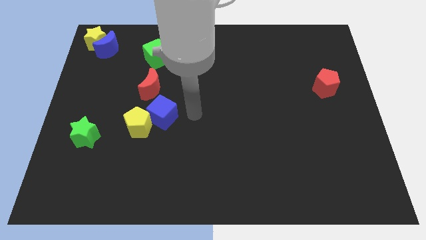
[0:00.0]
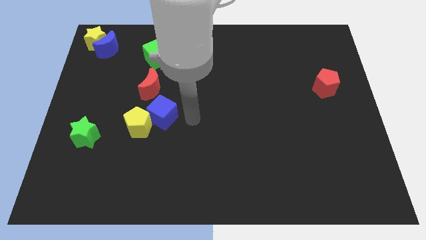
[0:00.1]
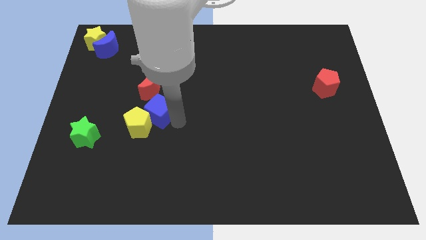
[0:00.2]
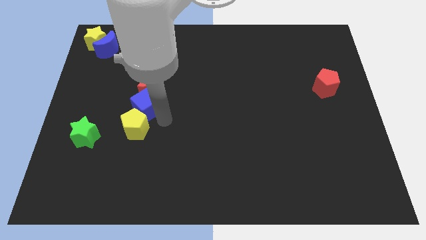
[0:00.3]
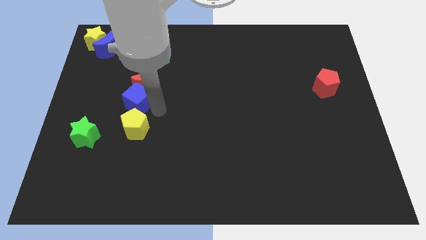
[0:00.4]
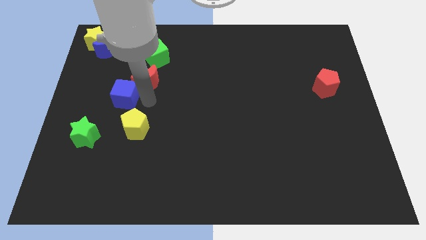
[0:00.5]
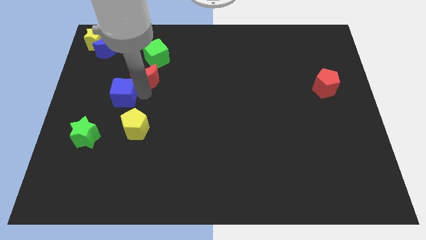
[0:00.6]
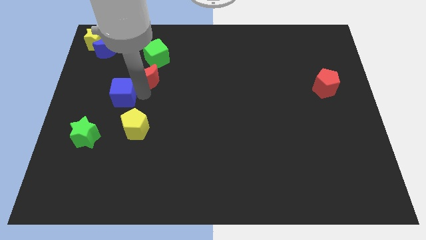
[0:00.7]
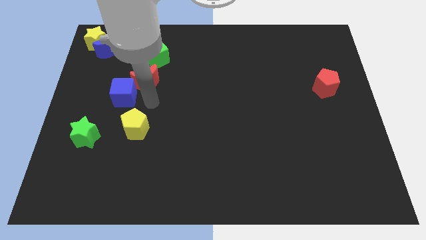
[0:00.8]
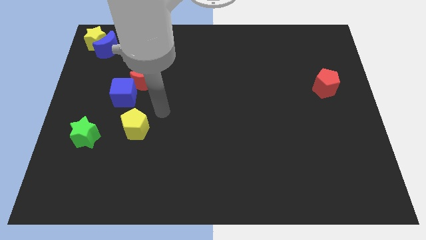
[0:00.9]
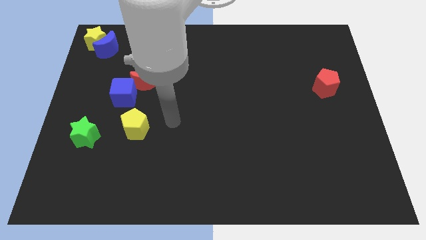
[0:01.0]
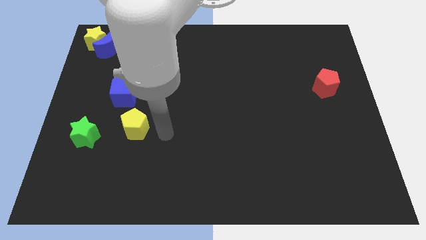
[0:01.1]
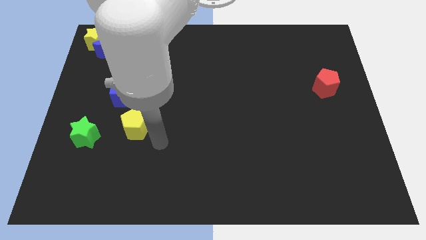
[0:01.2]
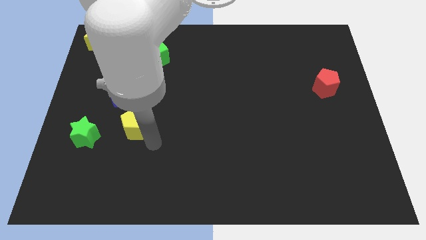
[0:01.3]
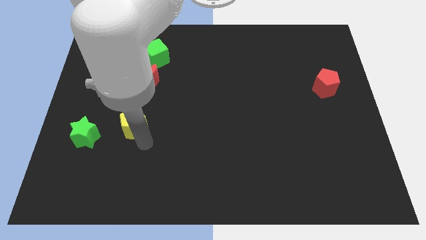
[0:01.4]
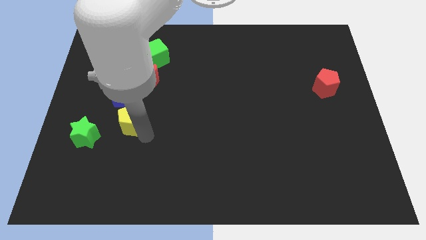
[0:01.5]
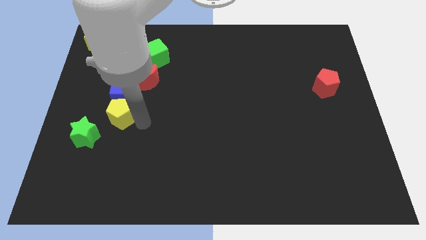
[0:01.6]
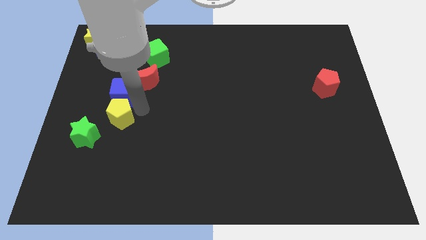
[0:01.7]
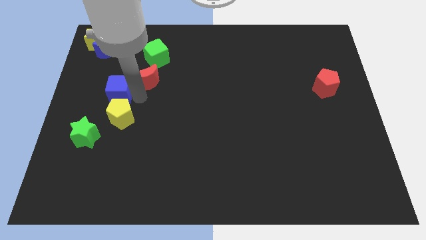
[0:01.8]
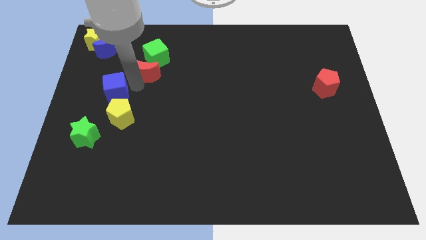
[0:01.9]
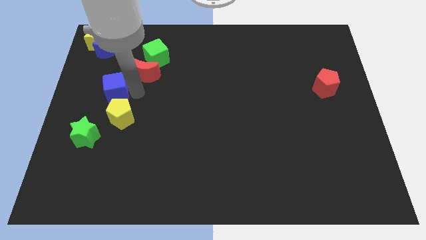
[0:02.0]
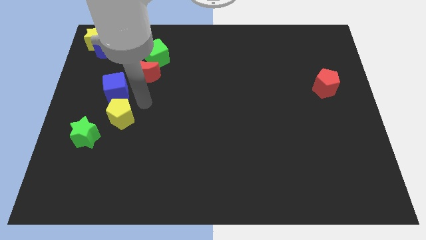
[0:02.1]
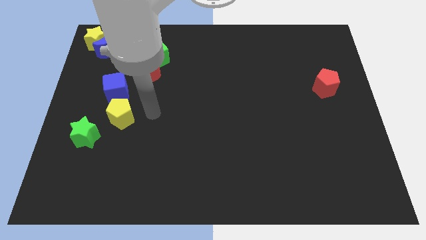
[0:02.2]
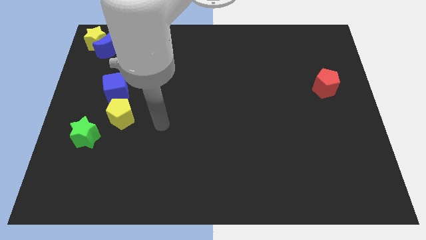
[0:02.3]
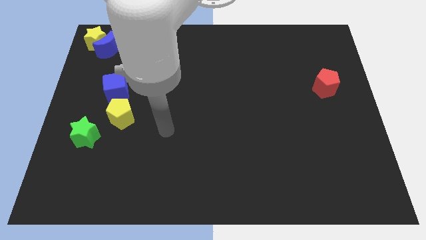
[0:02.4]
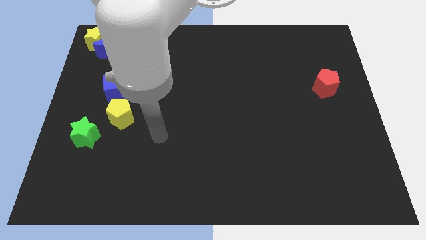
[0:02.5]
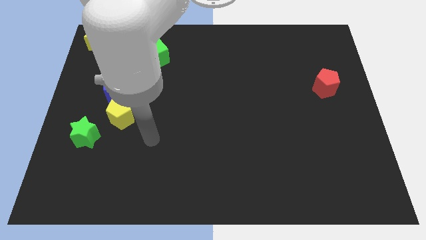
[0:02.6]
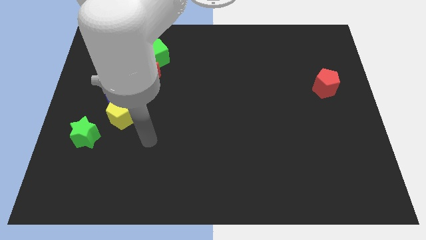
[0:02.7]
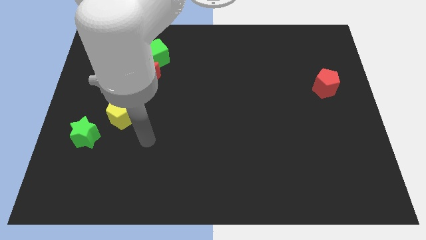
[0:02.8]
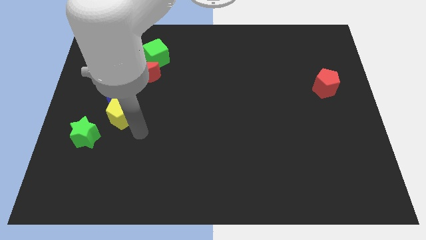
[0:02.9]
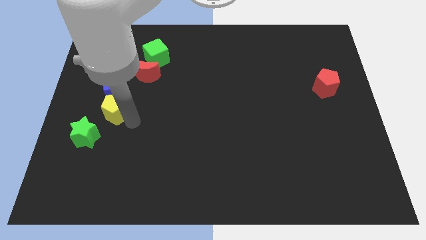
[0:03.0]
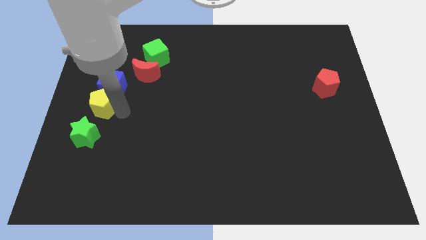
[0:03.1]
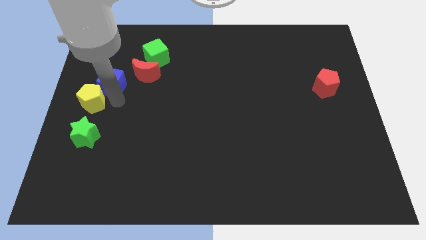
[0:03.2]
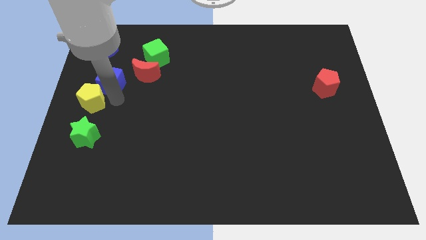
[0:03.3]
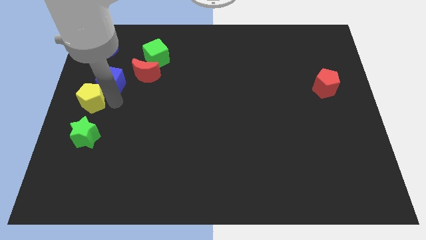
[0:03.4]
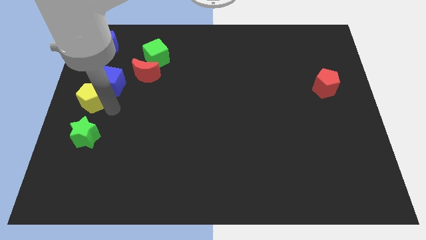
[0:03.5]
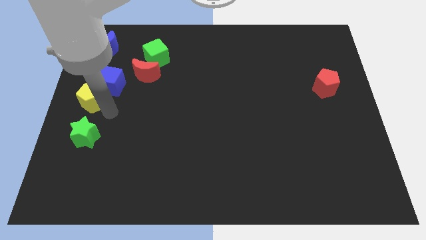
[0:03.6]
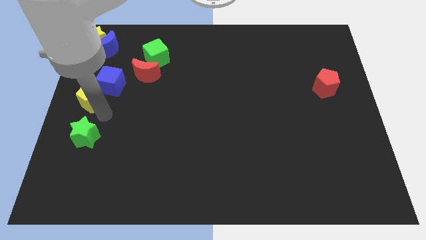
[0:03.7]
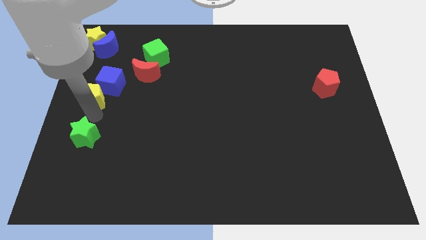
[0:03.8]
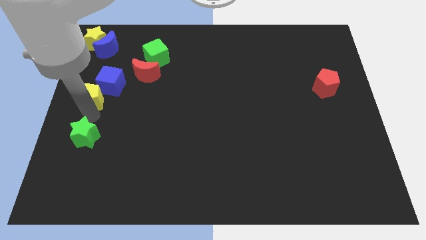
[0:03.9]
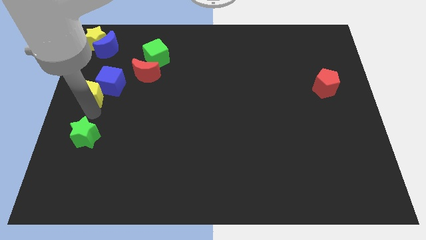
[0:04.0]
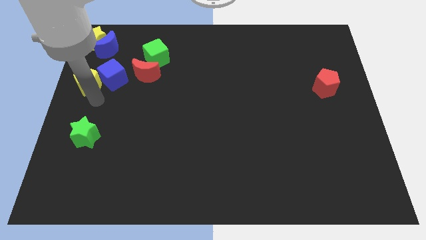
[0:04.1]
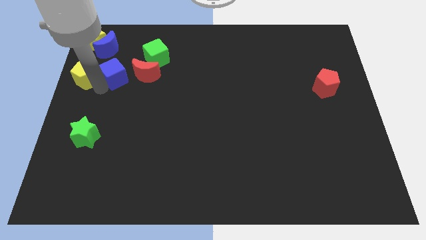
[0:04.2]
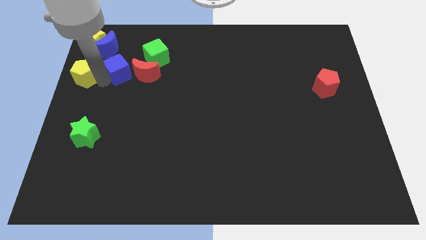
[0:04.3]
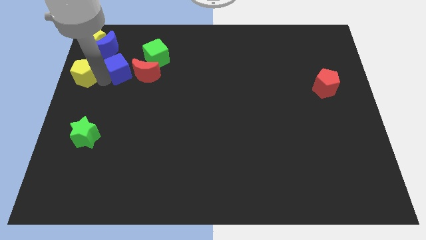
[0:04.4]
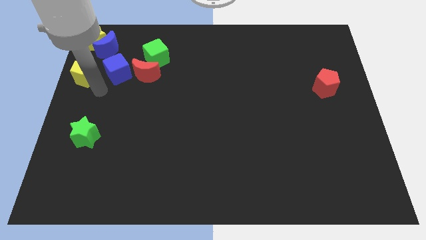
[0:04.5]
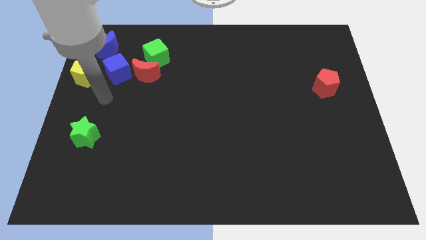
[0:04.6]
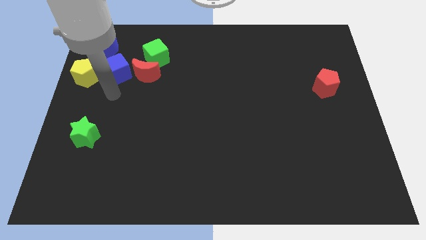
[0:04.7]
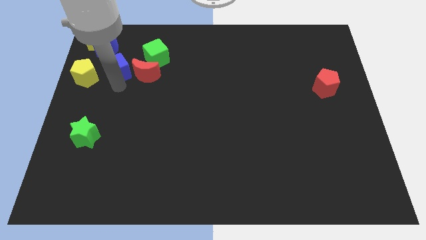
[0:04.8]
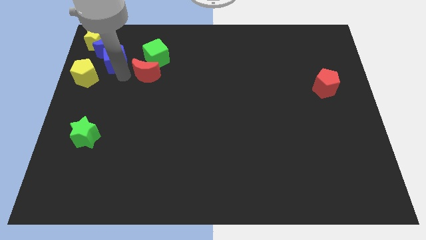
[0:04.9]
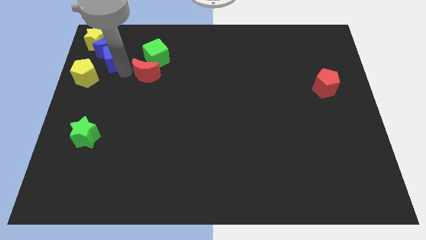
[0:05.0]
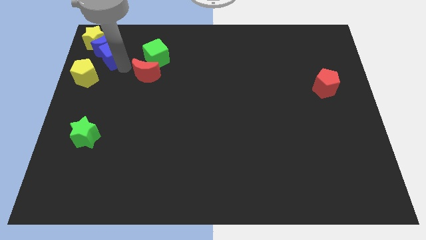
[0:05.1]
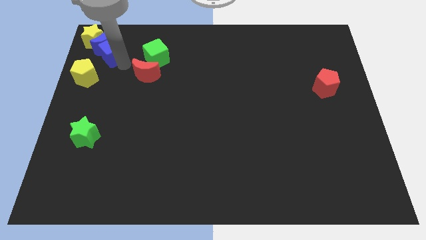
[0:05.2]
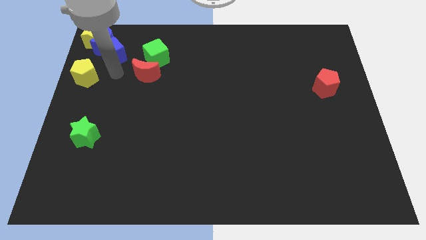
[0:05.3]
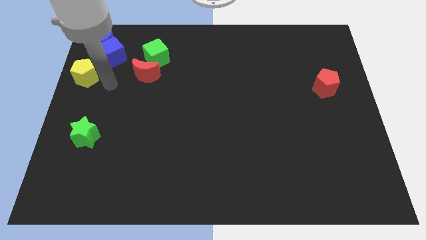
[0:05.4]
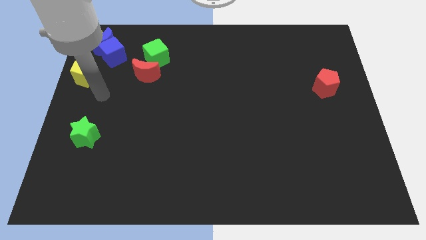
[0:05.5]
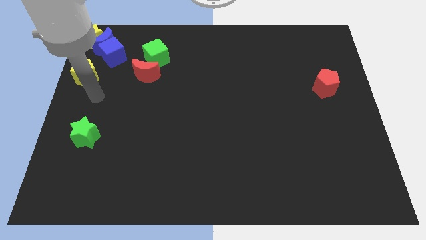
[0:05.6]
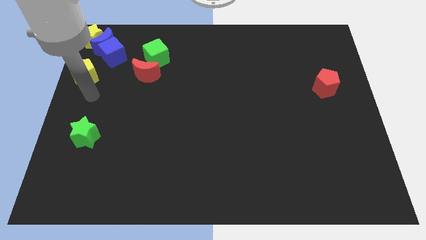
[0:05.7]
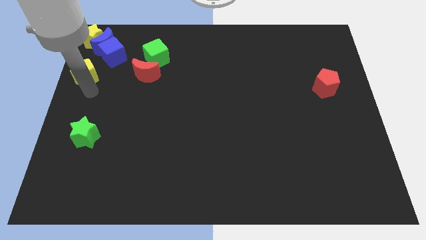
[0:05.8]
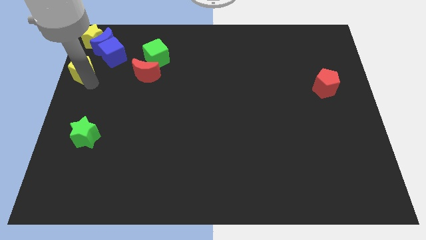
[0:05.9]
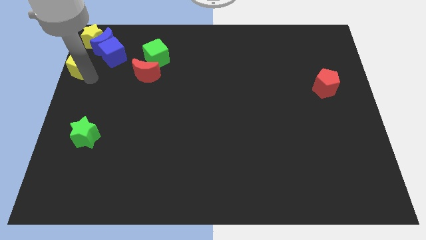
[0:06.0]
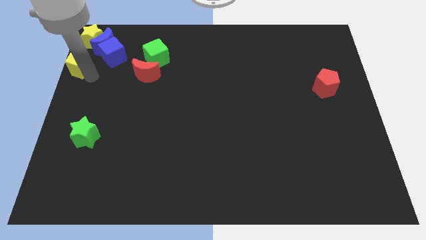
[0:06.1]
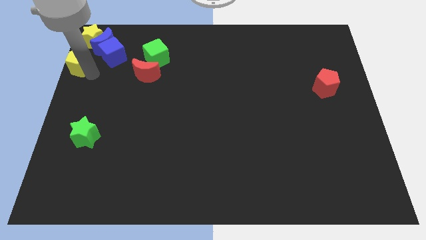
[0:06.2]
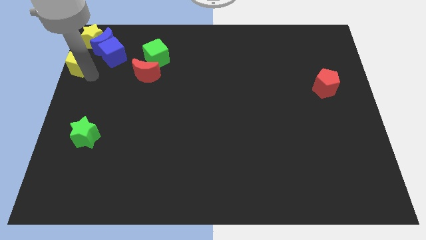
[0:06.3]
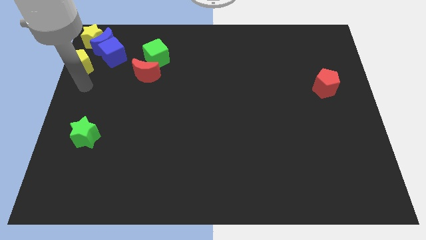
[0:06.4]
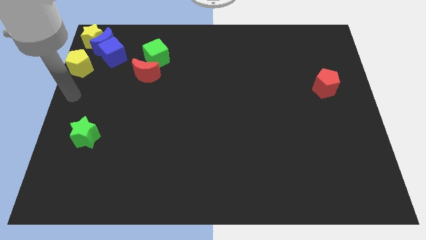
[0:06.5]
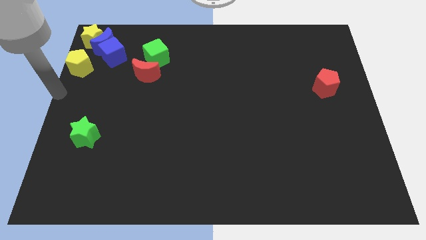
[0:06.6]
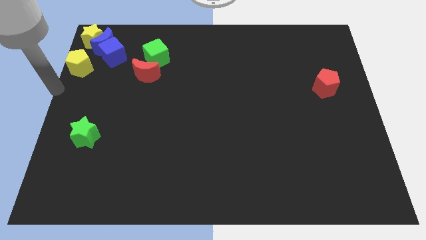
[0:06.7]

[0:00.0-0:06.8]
slide the yellow pentagon and blue cube to the top left corner together

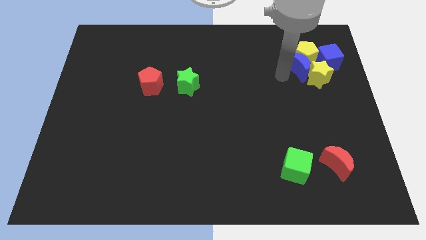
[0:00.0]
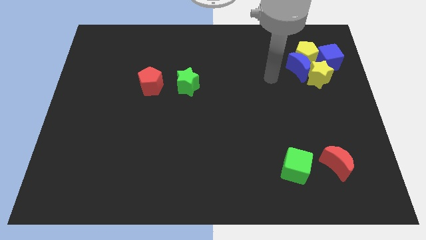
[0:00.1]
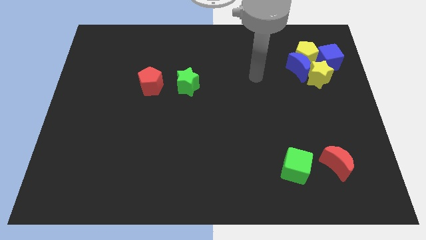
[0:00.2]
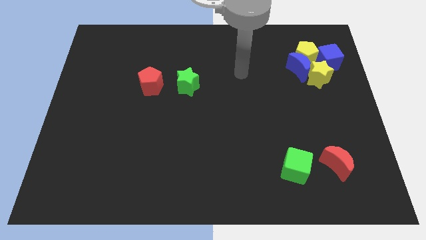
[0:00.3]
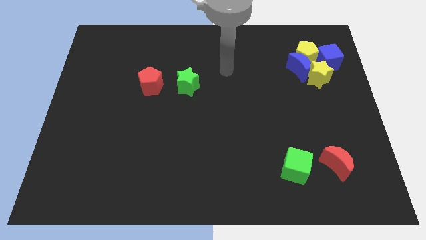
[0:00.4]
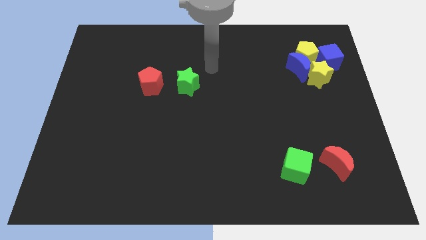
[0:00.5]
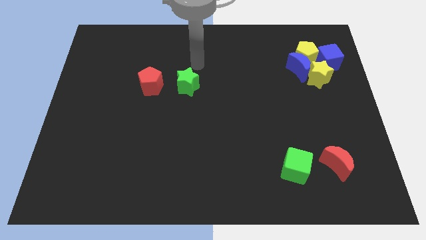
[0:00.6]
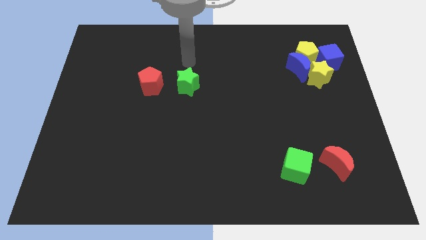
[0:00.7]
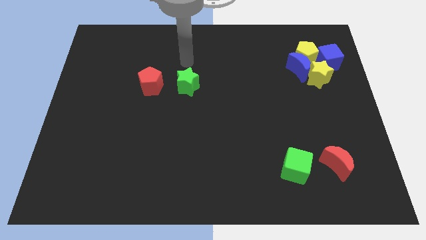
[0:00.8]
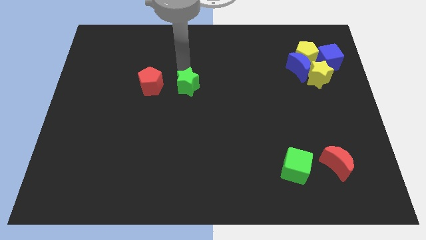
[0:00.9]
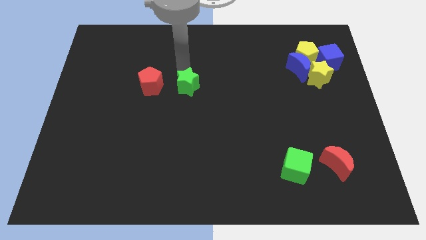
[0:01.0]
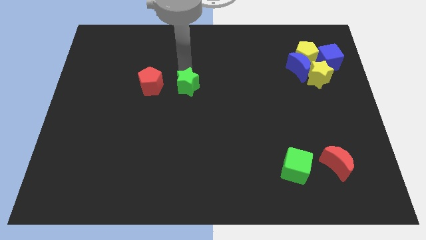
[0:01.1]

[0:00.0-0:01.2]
move your arm towards the green star

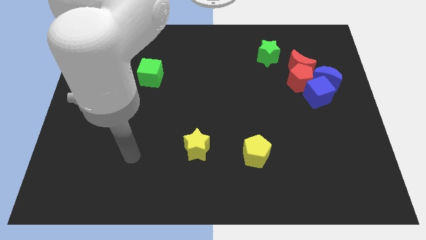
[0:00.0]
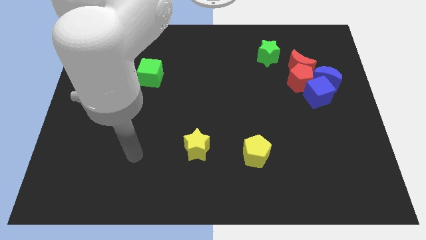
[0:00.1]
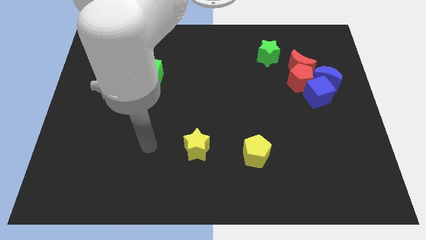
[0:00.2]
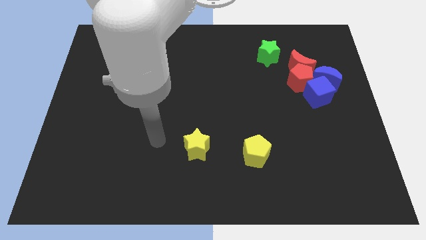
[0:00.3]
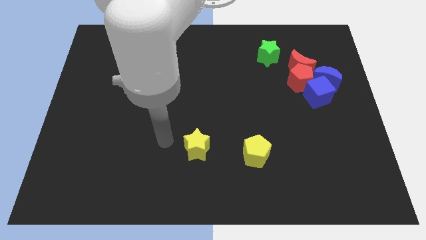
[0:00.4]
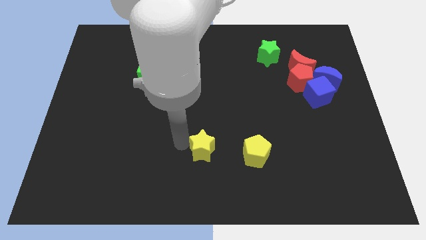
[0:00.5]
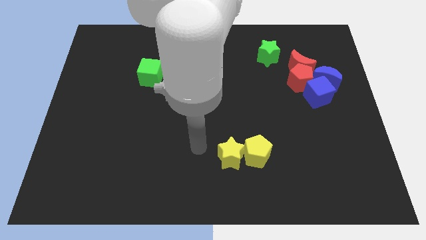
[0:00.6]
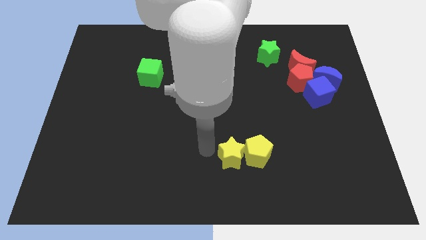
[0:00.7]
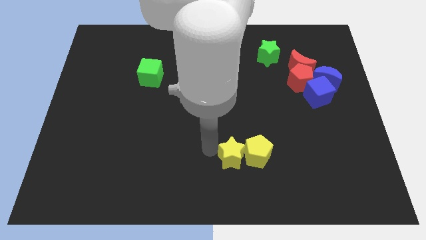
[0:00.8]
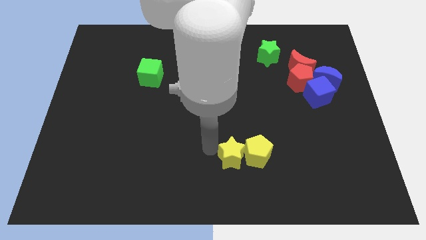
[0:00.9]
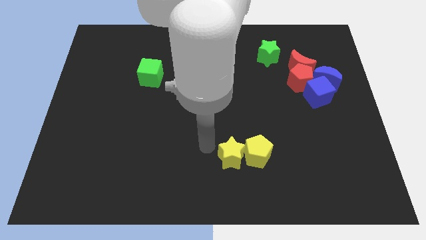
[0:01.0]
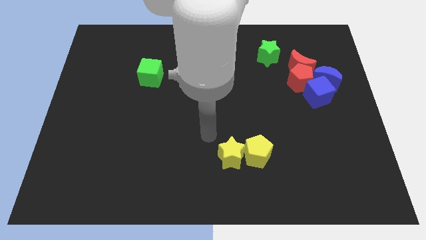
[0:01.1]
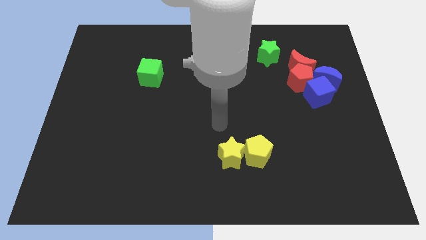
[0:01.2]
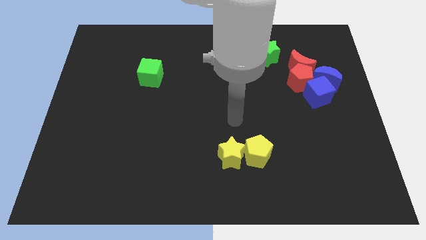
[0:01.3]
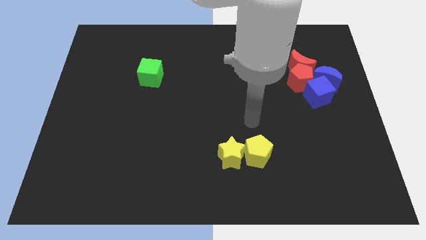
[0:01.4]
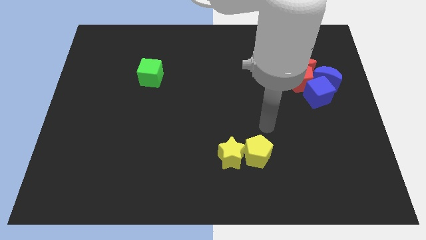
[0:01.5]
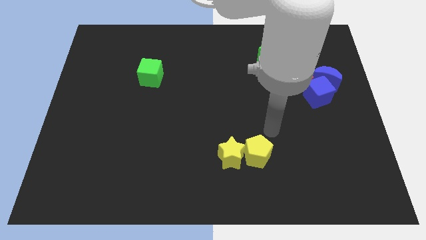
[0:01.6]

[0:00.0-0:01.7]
move yellow star close to yellow pentagon
